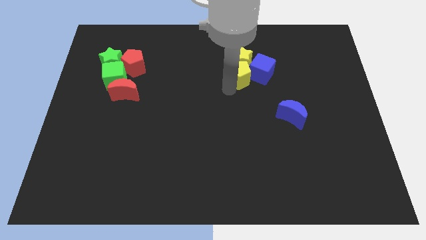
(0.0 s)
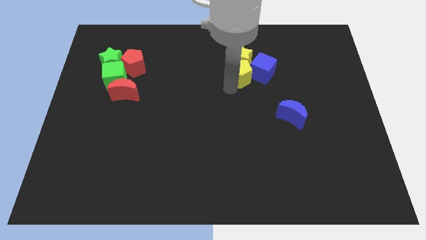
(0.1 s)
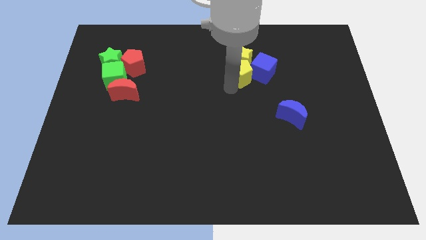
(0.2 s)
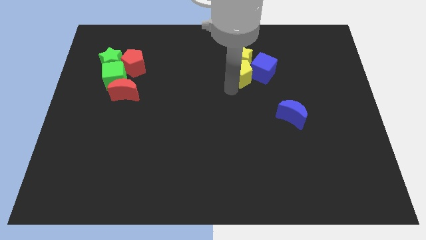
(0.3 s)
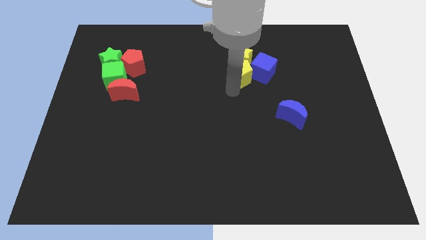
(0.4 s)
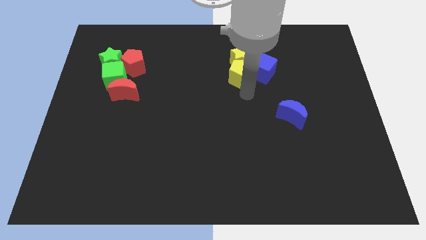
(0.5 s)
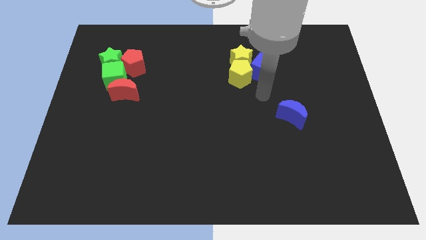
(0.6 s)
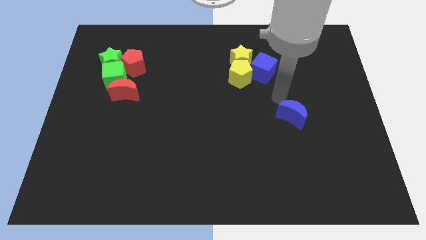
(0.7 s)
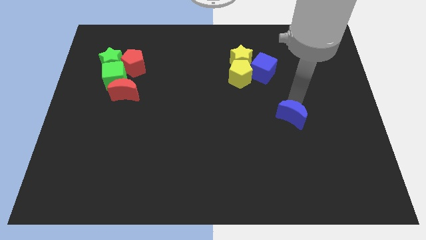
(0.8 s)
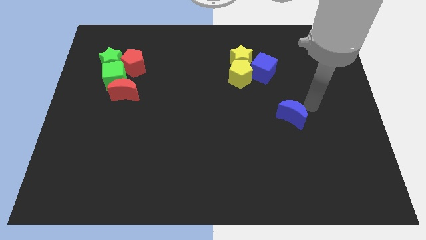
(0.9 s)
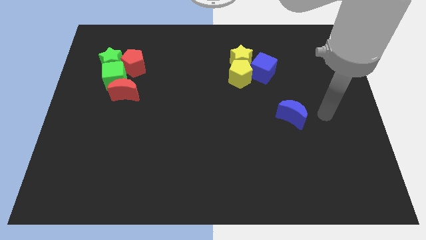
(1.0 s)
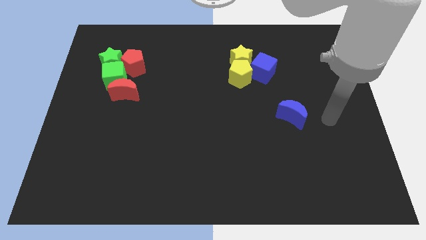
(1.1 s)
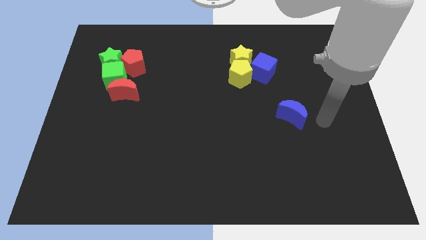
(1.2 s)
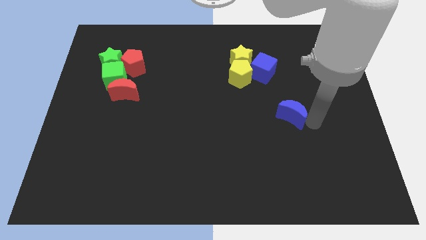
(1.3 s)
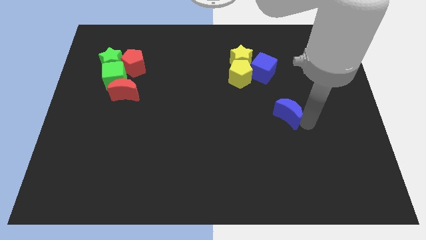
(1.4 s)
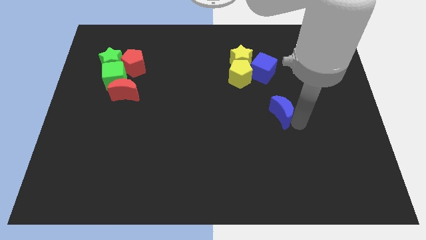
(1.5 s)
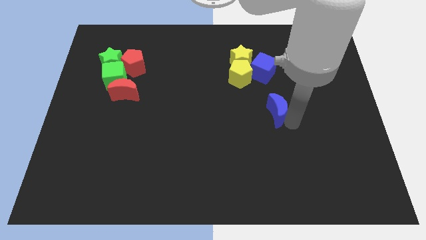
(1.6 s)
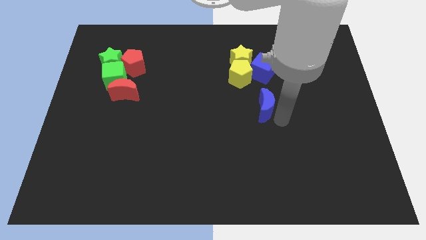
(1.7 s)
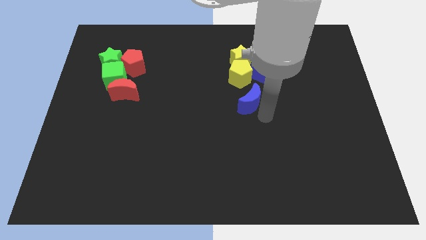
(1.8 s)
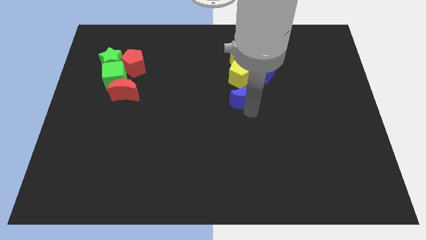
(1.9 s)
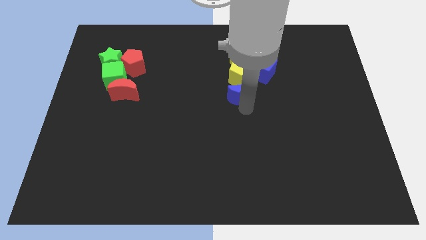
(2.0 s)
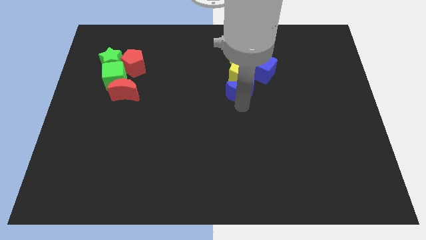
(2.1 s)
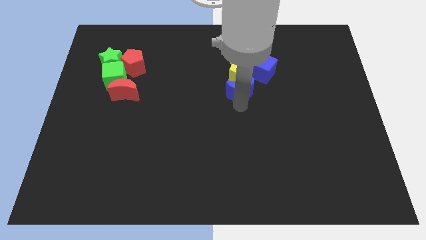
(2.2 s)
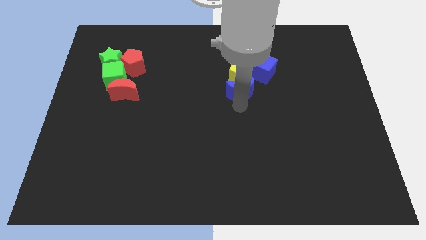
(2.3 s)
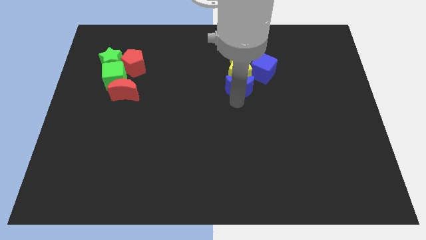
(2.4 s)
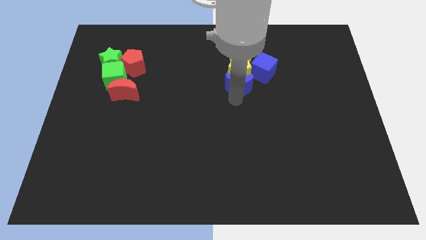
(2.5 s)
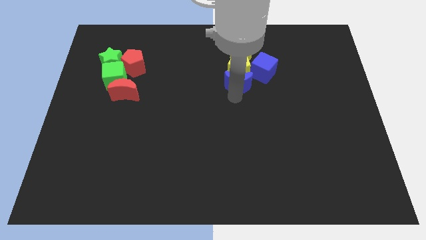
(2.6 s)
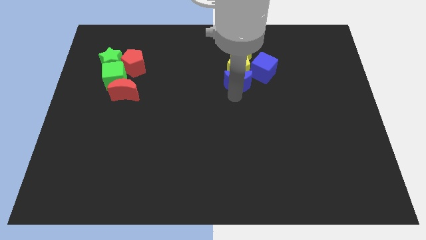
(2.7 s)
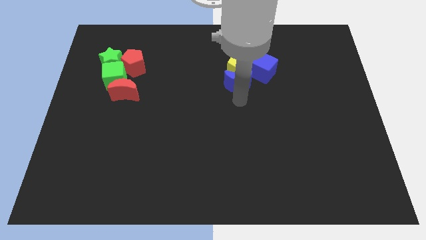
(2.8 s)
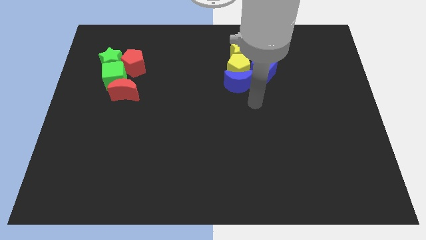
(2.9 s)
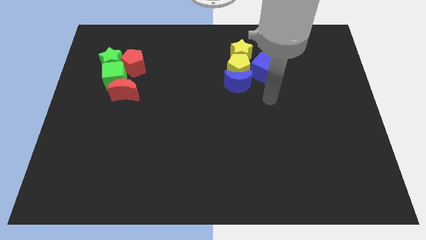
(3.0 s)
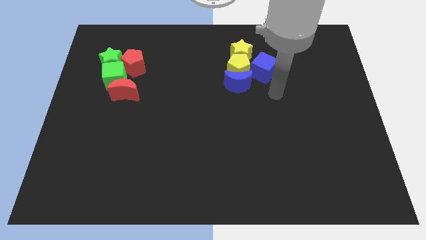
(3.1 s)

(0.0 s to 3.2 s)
push the blue moon towards the bottom side of the yellow pentagon

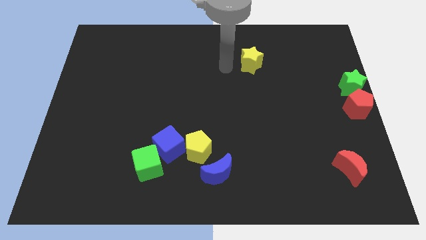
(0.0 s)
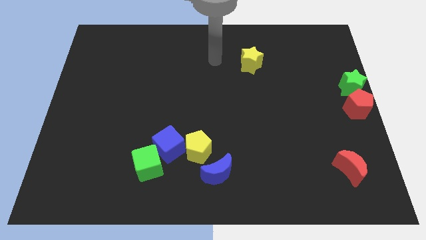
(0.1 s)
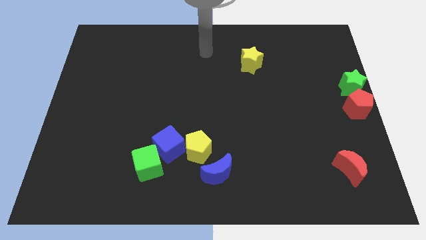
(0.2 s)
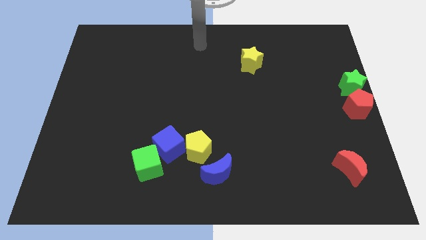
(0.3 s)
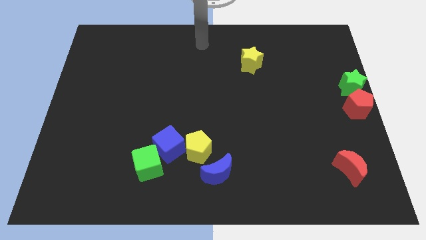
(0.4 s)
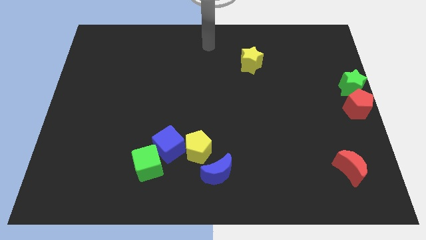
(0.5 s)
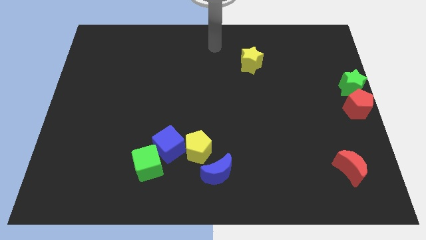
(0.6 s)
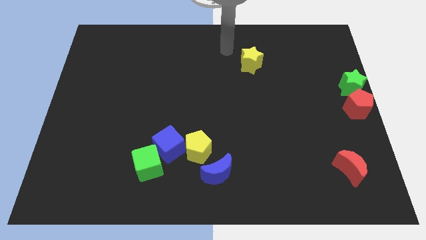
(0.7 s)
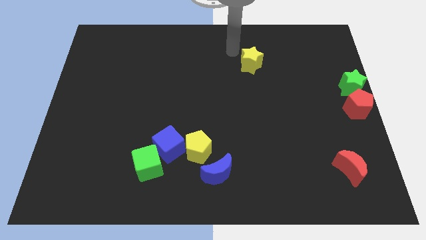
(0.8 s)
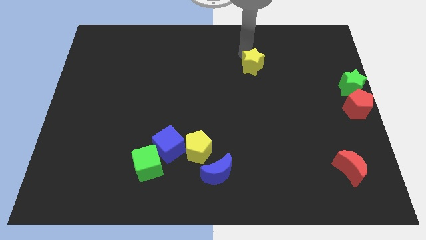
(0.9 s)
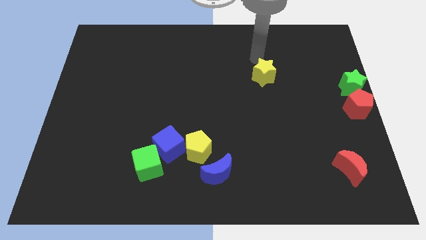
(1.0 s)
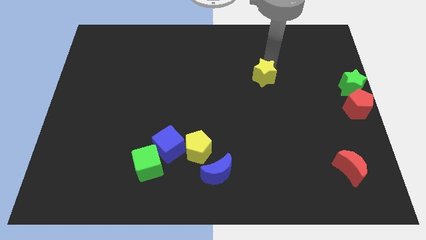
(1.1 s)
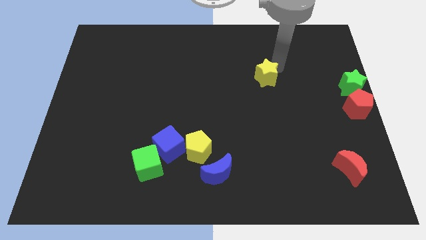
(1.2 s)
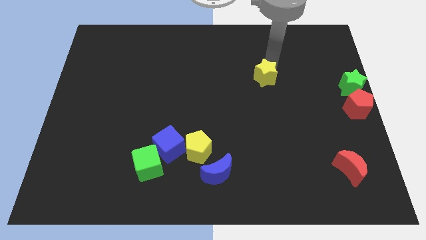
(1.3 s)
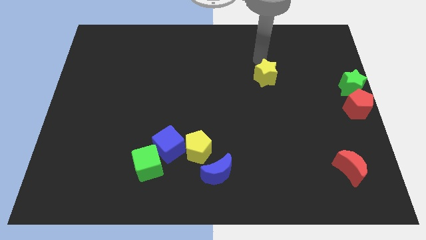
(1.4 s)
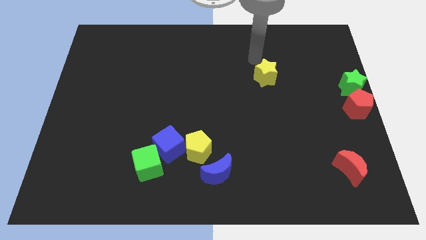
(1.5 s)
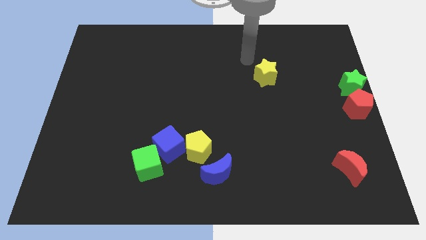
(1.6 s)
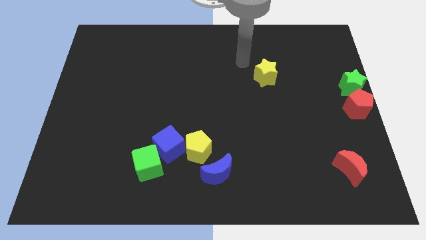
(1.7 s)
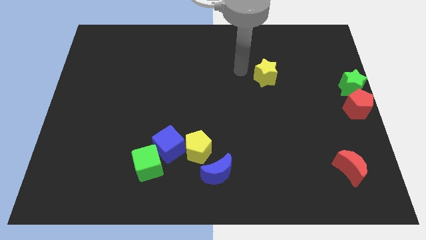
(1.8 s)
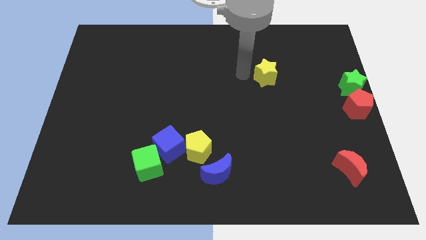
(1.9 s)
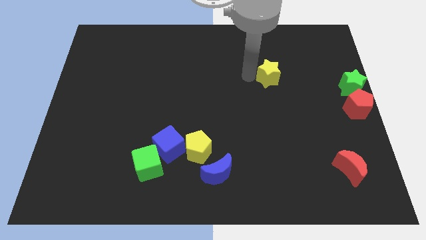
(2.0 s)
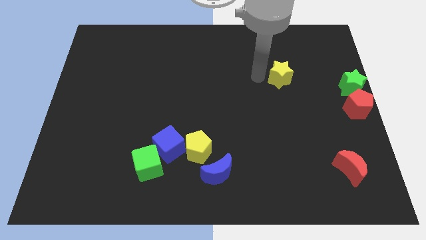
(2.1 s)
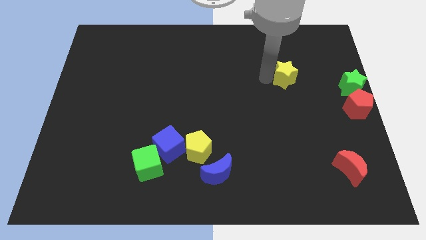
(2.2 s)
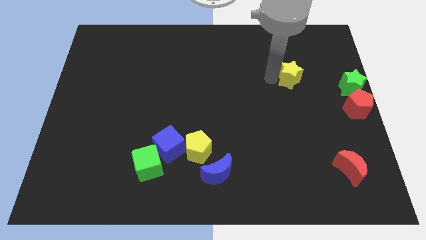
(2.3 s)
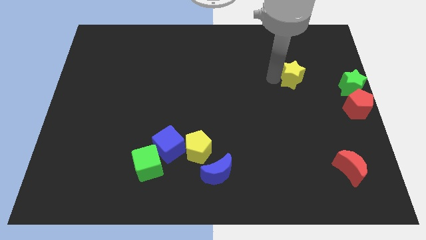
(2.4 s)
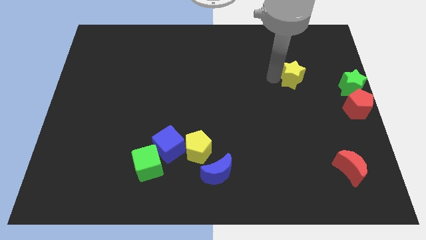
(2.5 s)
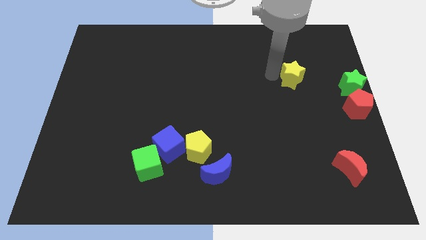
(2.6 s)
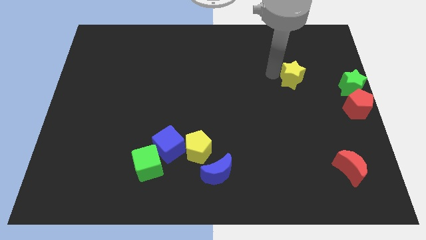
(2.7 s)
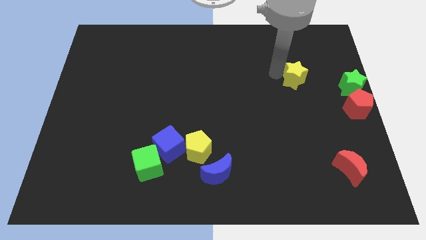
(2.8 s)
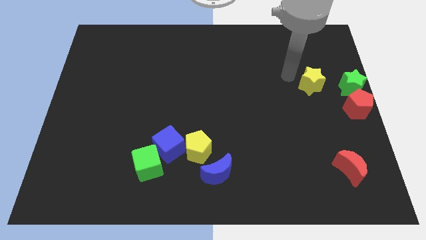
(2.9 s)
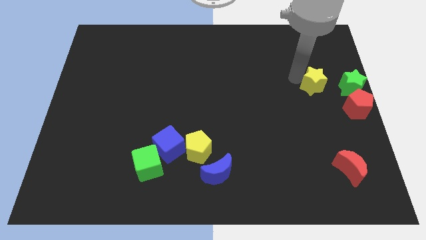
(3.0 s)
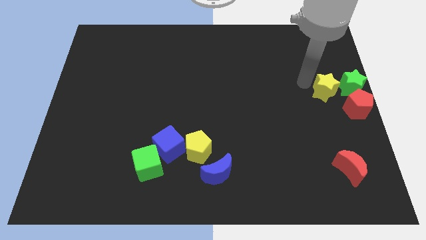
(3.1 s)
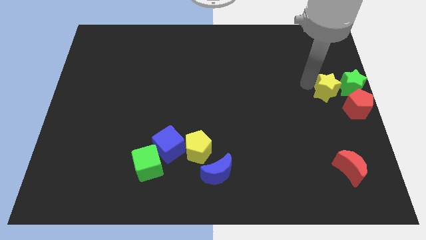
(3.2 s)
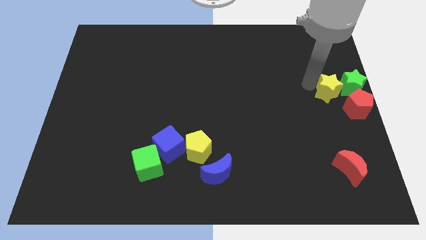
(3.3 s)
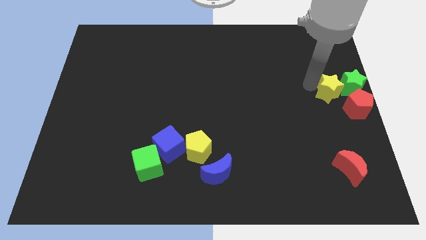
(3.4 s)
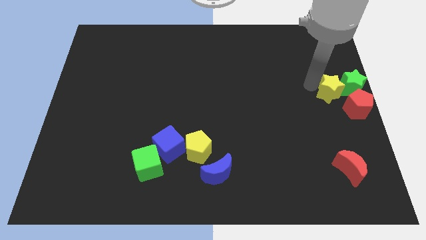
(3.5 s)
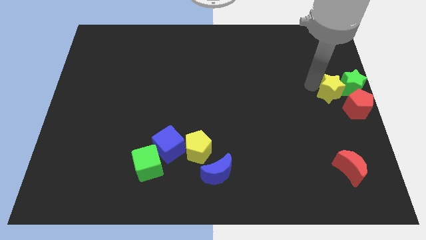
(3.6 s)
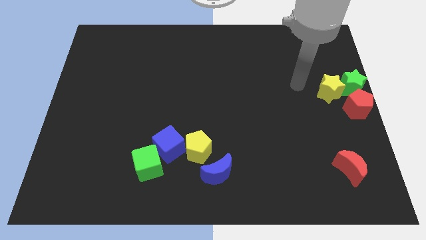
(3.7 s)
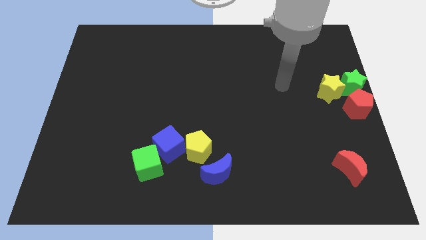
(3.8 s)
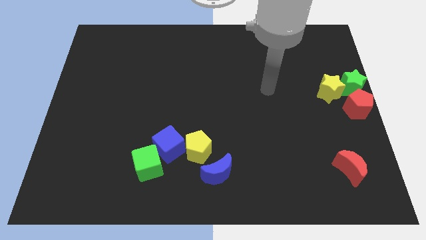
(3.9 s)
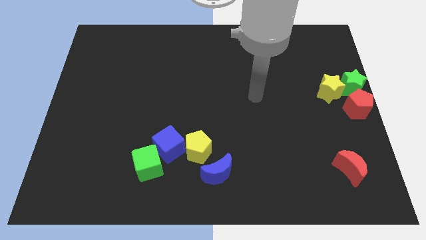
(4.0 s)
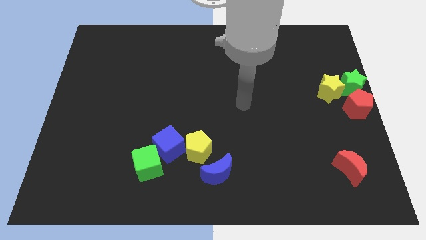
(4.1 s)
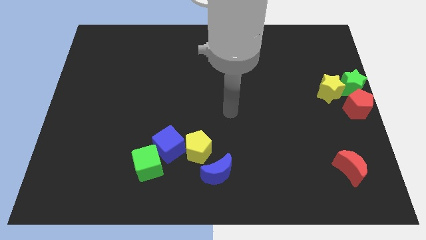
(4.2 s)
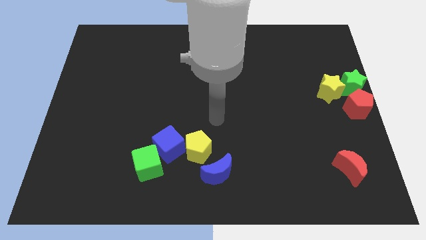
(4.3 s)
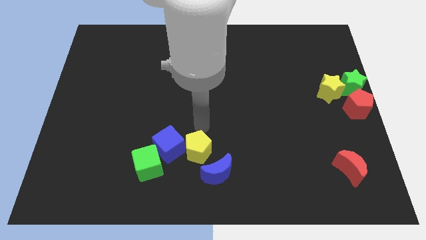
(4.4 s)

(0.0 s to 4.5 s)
push the yellow star close to the green star

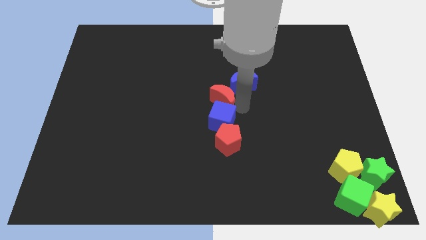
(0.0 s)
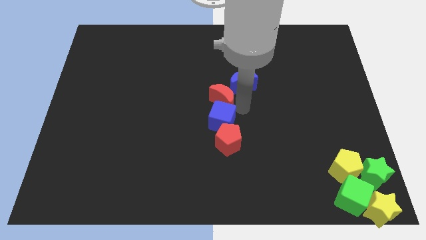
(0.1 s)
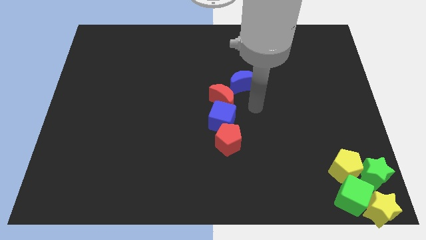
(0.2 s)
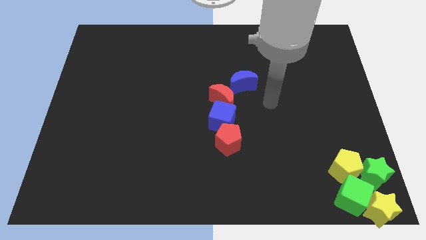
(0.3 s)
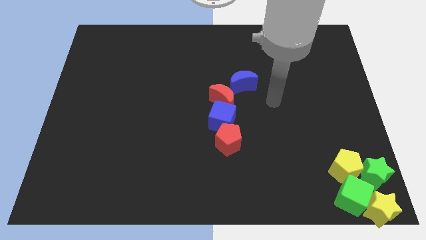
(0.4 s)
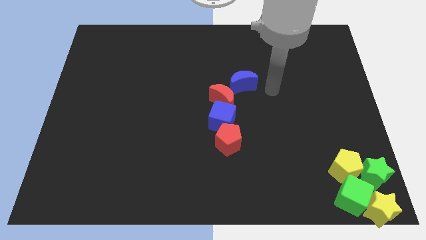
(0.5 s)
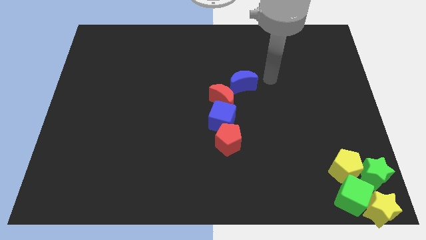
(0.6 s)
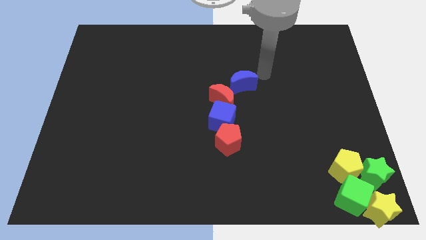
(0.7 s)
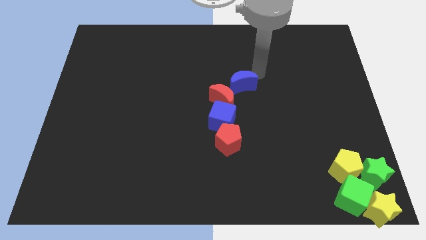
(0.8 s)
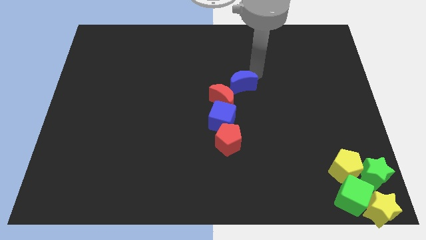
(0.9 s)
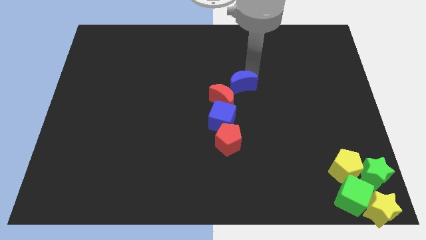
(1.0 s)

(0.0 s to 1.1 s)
move your arm to the top right of blue crescent

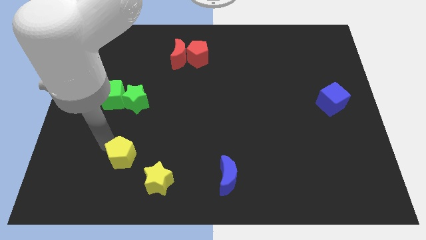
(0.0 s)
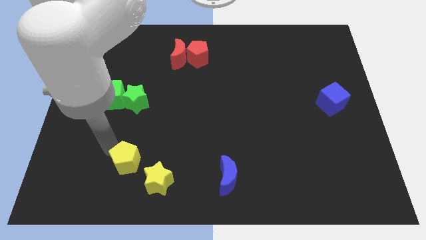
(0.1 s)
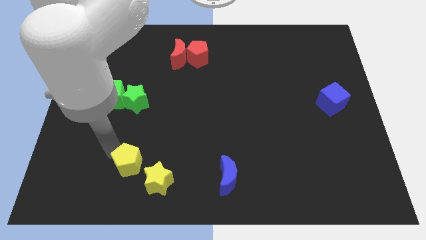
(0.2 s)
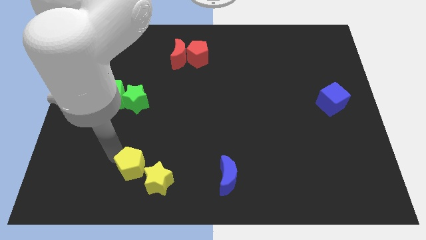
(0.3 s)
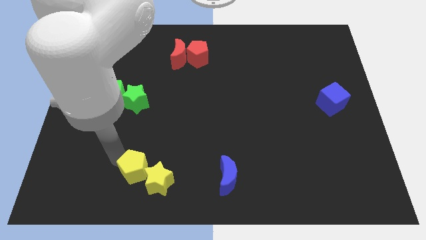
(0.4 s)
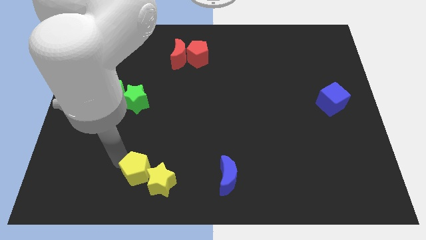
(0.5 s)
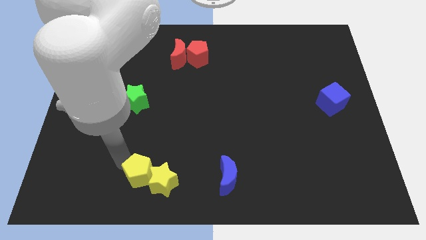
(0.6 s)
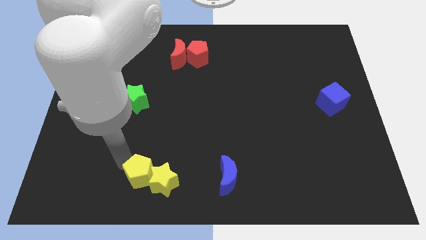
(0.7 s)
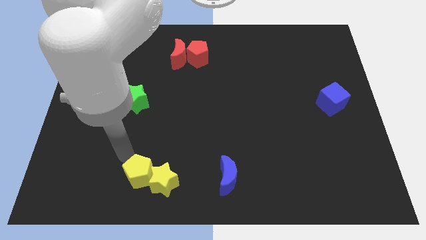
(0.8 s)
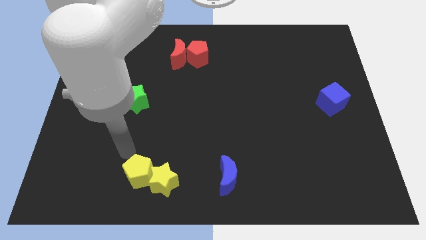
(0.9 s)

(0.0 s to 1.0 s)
move the yellow pentagon to the left of the yellow star
